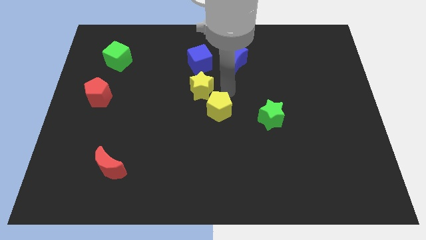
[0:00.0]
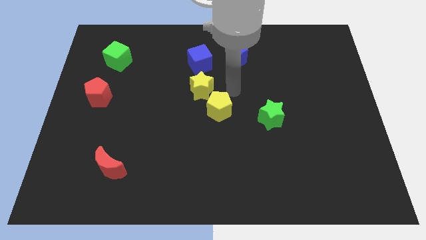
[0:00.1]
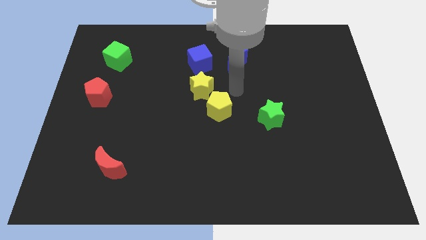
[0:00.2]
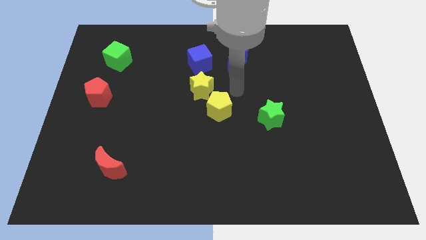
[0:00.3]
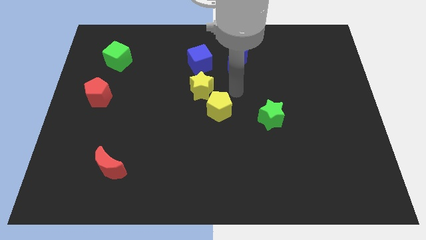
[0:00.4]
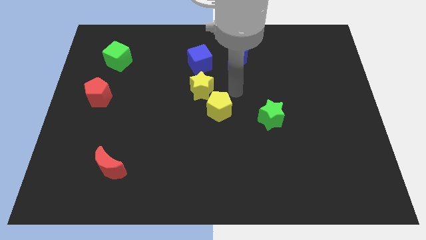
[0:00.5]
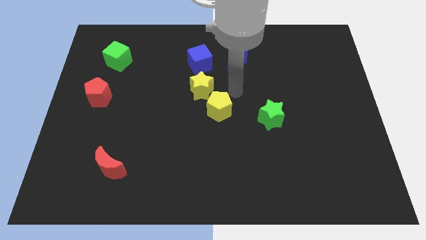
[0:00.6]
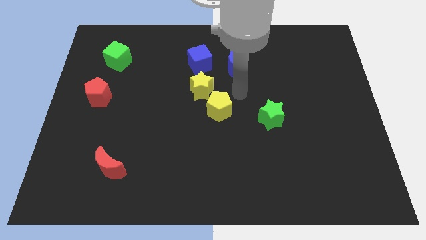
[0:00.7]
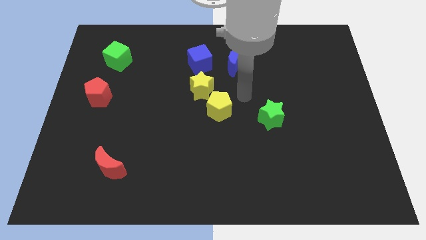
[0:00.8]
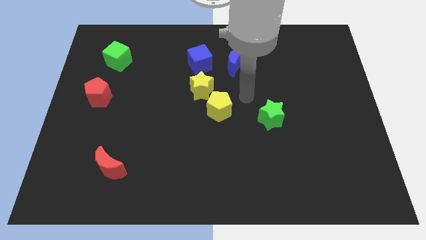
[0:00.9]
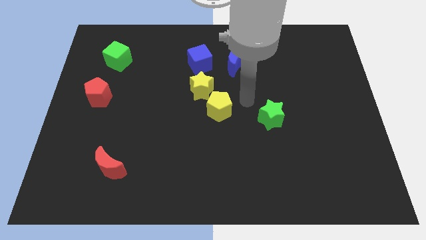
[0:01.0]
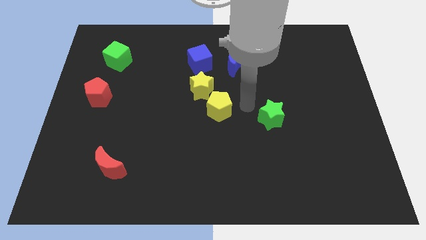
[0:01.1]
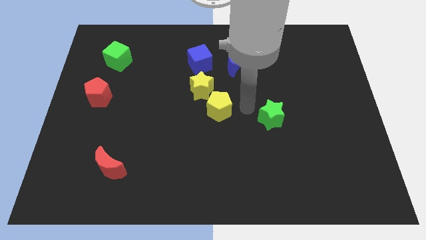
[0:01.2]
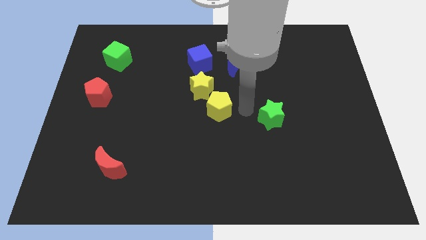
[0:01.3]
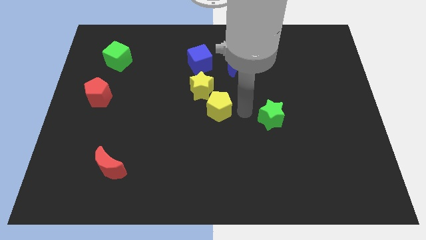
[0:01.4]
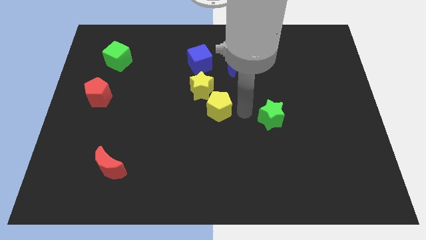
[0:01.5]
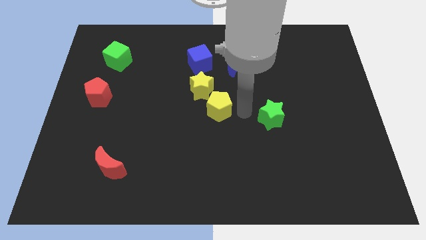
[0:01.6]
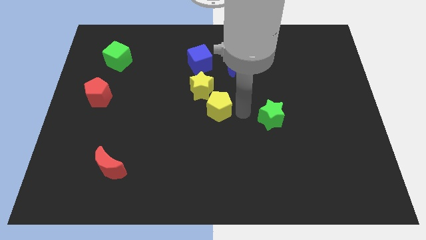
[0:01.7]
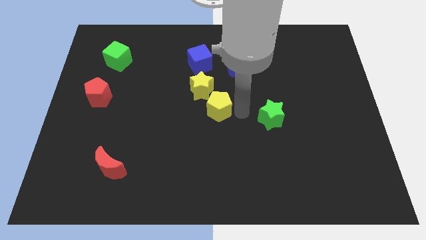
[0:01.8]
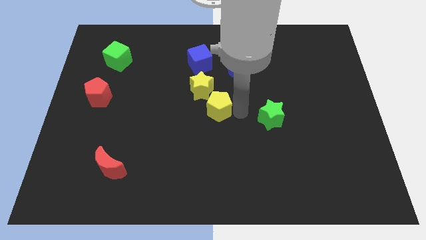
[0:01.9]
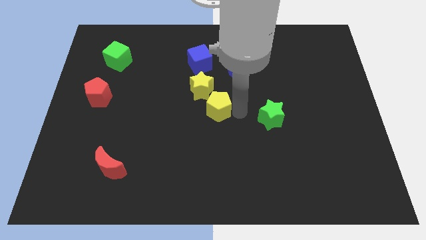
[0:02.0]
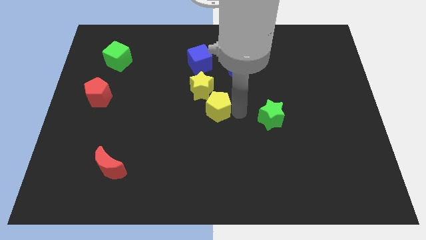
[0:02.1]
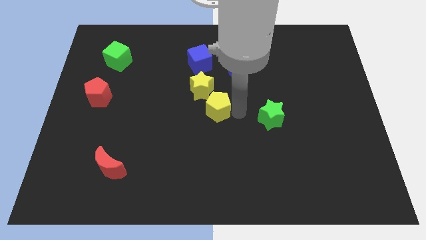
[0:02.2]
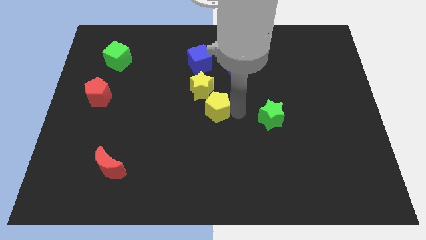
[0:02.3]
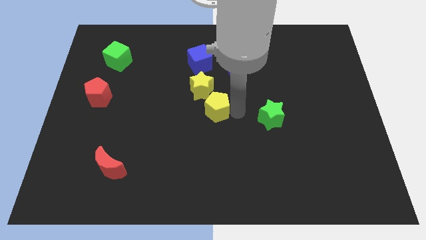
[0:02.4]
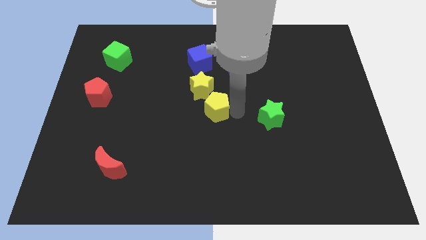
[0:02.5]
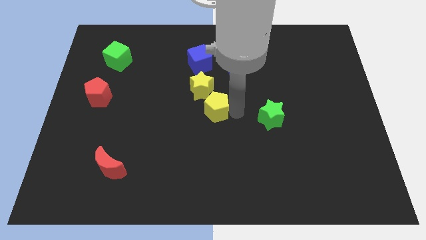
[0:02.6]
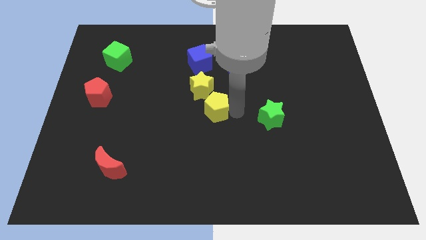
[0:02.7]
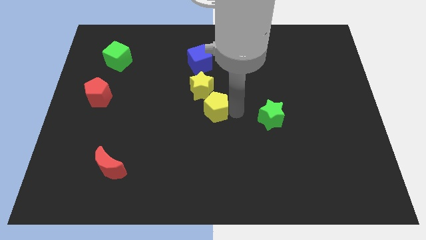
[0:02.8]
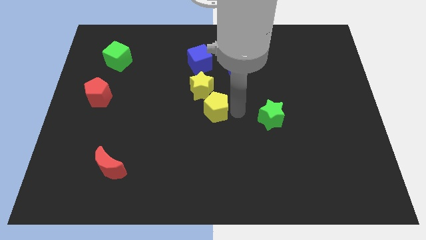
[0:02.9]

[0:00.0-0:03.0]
move your arm close to the yellow pentagon

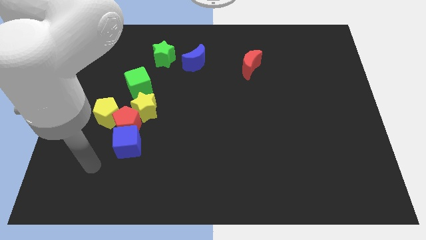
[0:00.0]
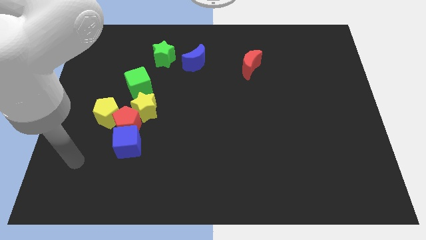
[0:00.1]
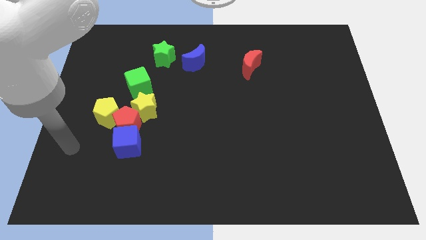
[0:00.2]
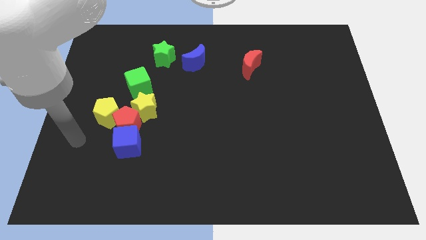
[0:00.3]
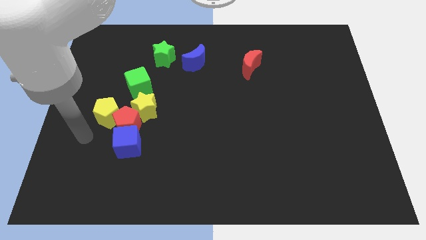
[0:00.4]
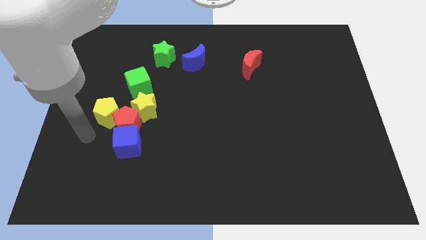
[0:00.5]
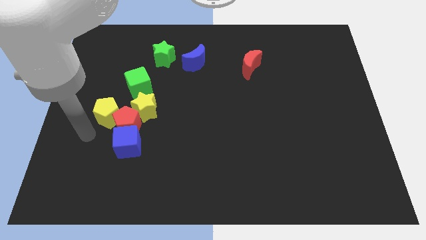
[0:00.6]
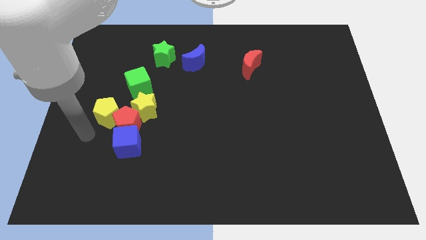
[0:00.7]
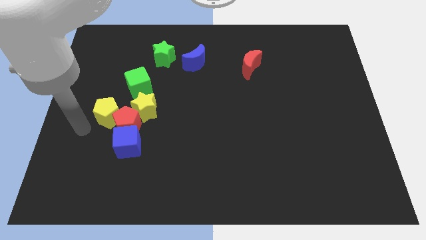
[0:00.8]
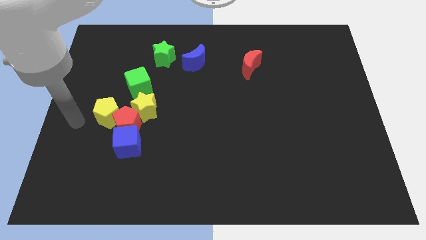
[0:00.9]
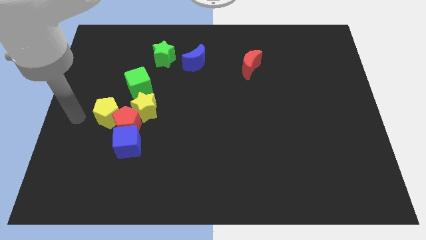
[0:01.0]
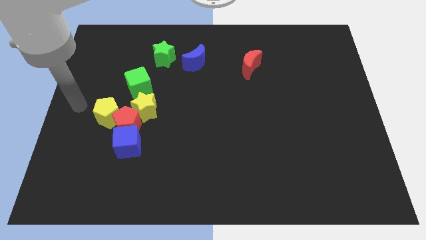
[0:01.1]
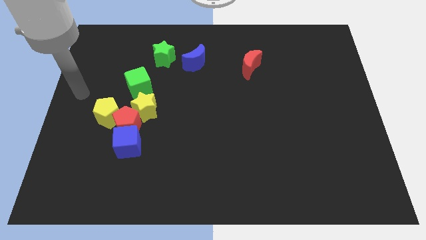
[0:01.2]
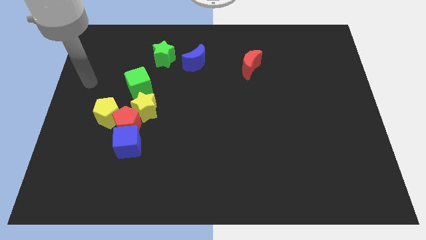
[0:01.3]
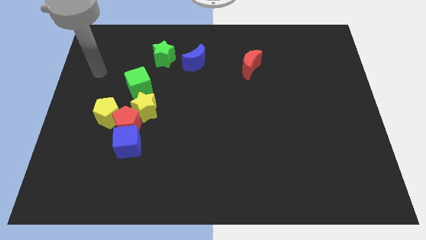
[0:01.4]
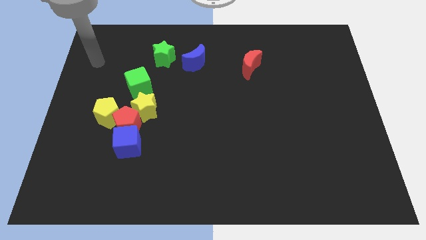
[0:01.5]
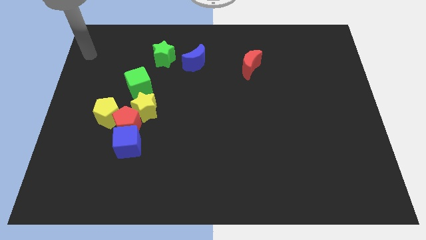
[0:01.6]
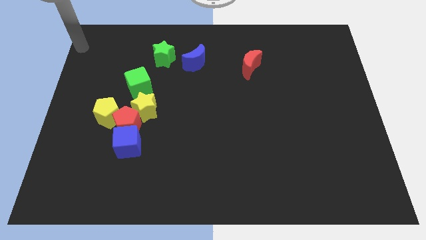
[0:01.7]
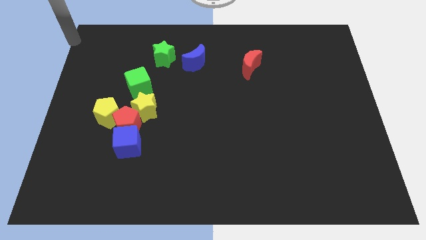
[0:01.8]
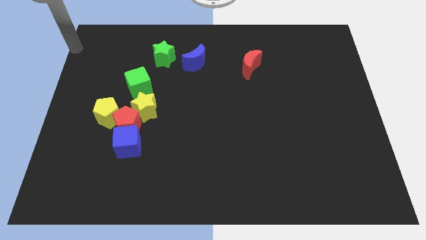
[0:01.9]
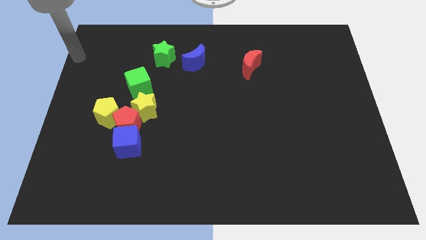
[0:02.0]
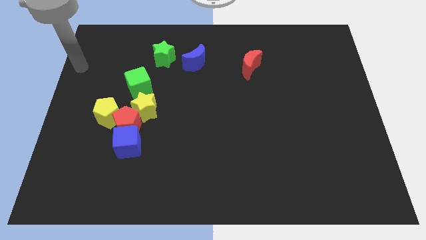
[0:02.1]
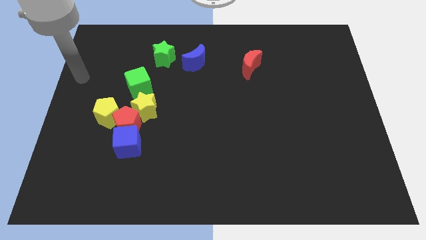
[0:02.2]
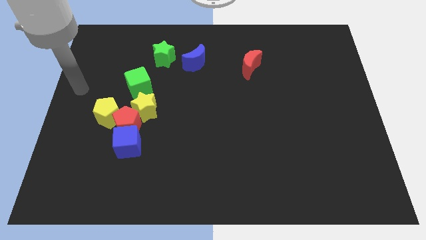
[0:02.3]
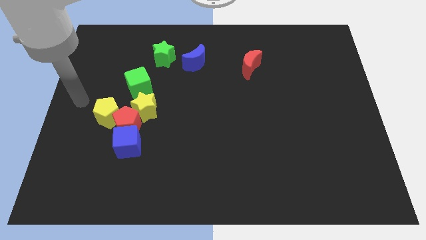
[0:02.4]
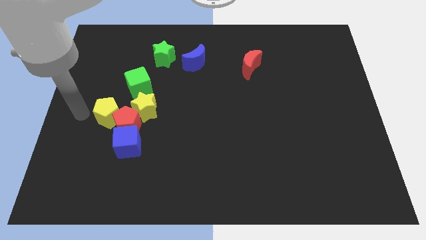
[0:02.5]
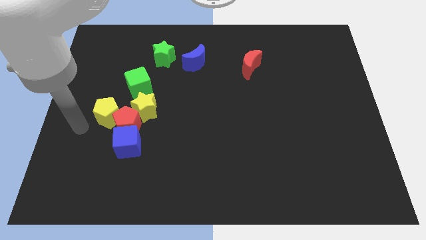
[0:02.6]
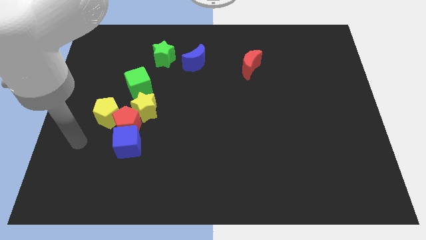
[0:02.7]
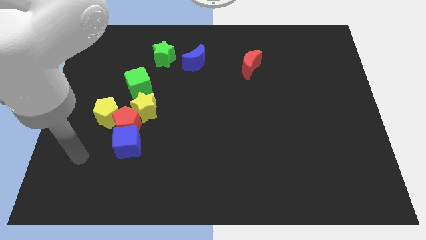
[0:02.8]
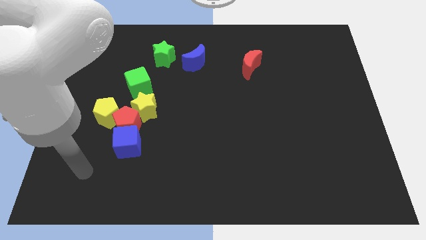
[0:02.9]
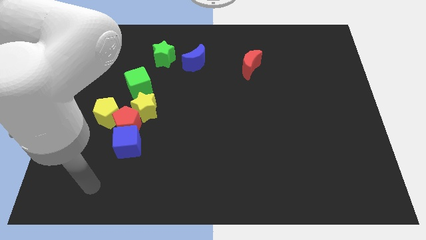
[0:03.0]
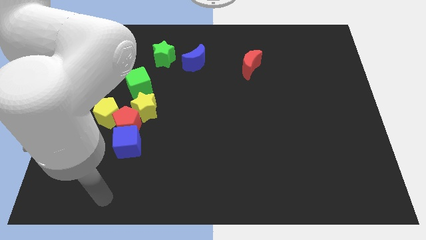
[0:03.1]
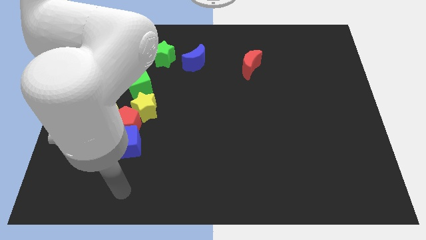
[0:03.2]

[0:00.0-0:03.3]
move your arm to bottom side of the blue cube

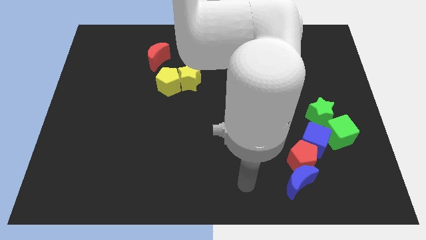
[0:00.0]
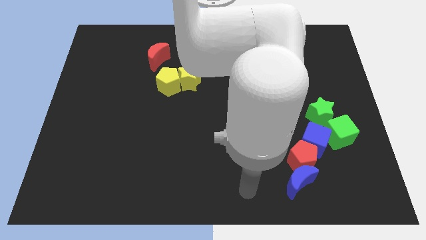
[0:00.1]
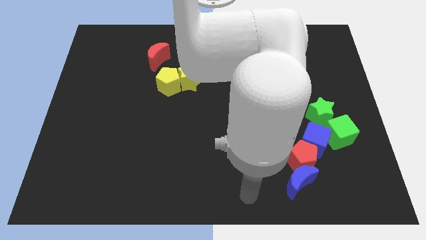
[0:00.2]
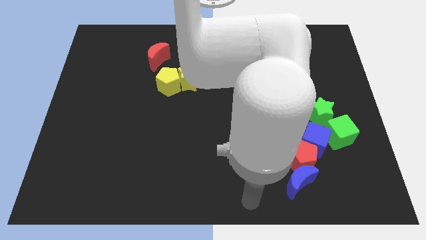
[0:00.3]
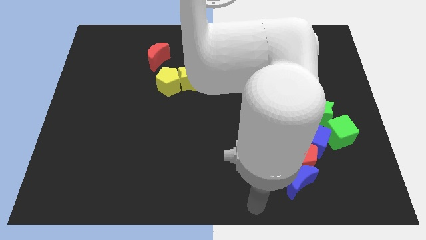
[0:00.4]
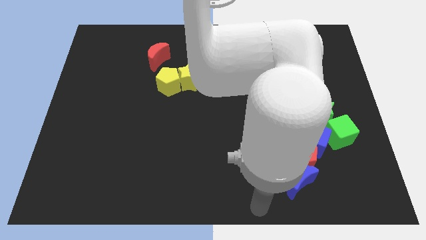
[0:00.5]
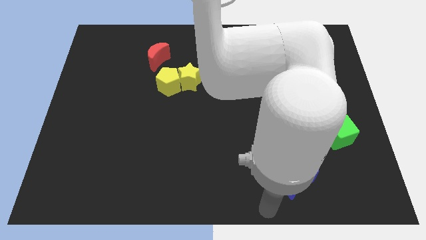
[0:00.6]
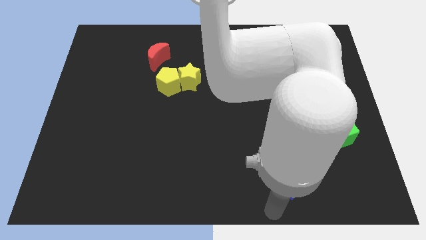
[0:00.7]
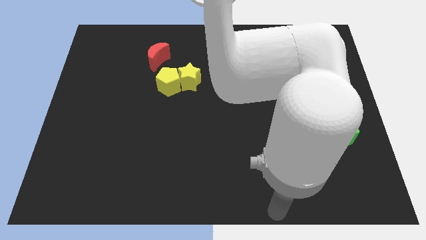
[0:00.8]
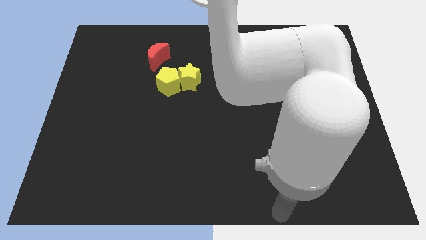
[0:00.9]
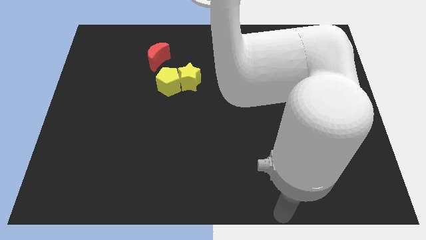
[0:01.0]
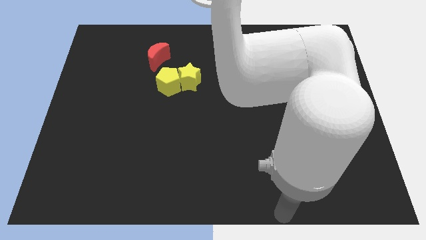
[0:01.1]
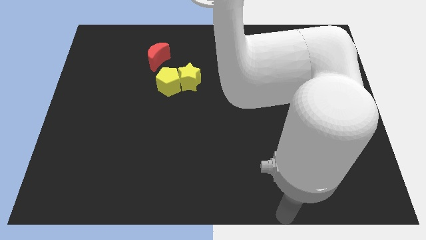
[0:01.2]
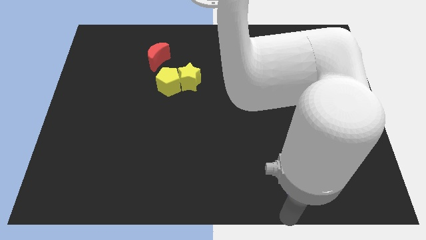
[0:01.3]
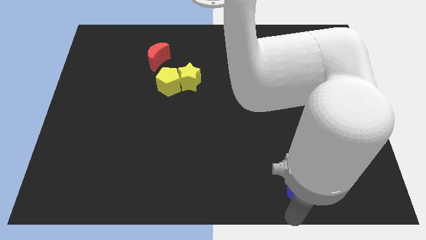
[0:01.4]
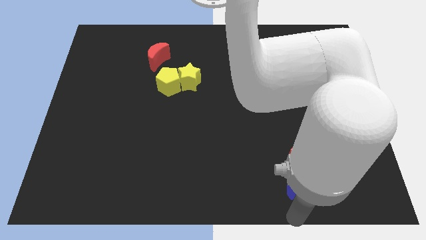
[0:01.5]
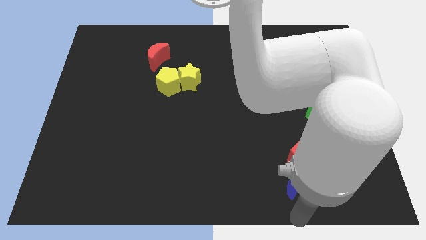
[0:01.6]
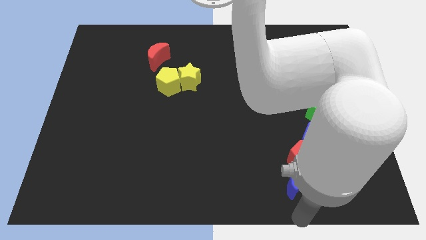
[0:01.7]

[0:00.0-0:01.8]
place your arm at the bottom of blue moon

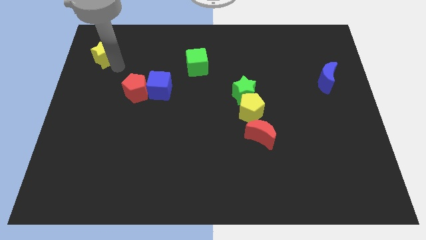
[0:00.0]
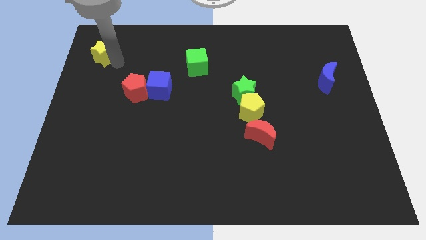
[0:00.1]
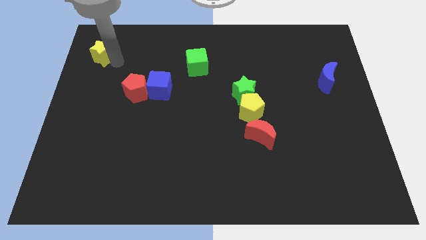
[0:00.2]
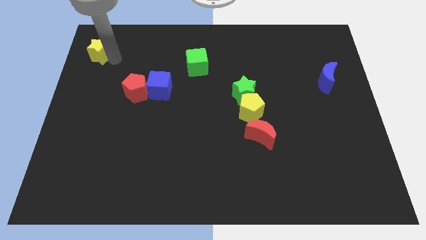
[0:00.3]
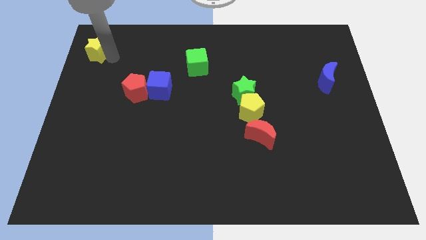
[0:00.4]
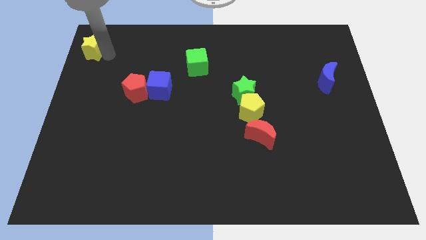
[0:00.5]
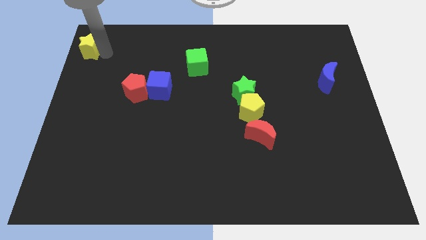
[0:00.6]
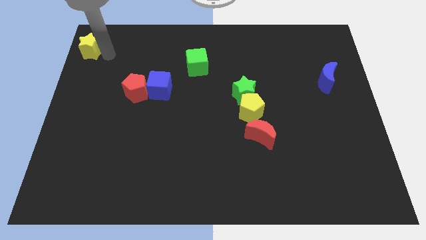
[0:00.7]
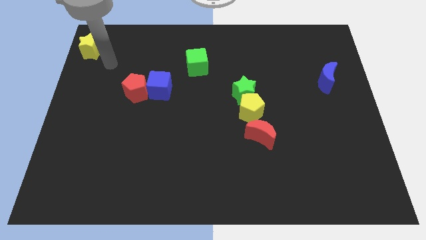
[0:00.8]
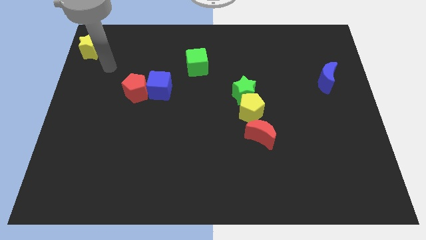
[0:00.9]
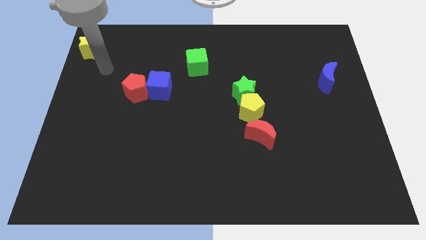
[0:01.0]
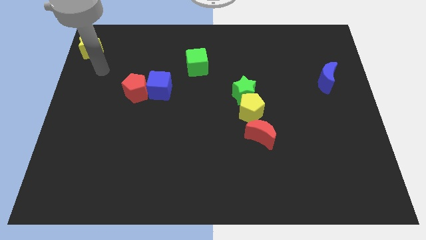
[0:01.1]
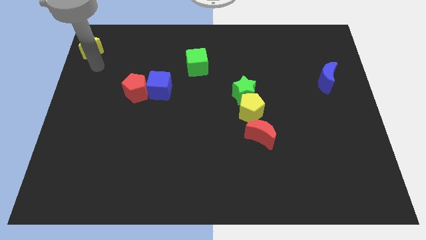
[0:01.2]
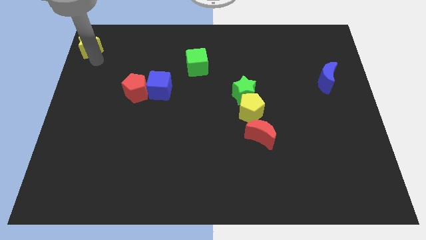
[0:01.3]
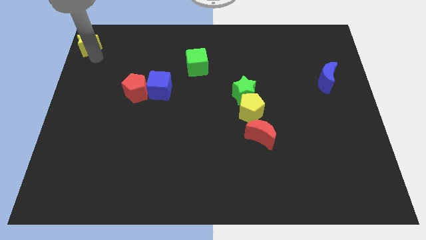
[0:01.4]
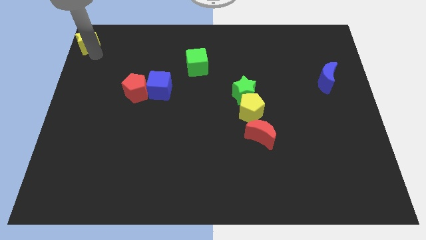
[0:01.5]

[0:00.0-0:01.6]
push the yellow star to the top left corner of the board
